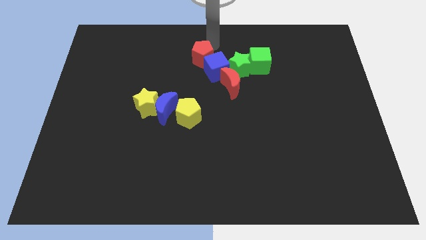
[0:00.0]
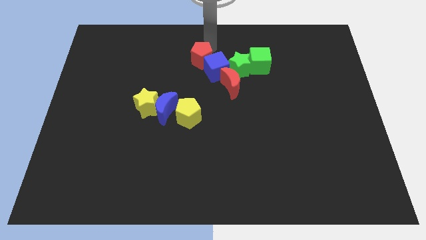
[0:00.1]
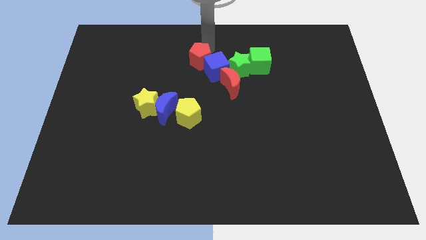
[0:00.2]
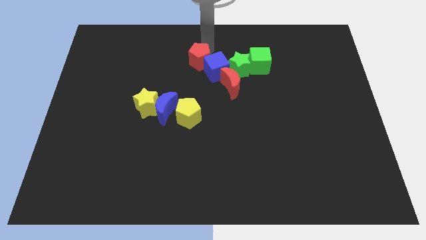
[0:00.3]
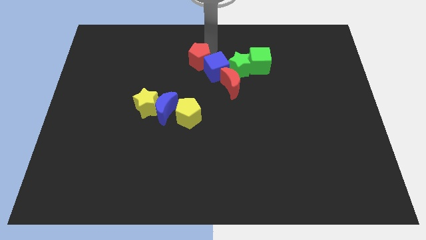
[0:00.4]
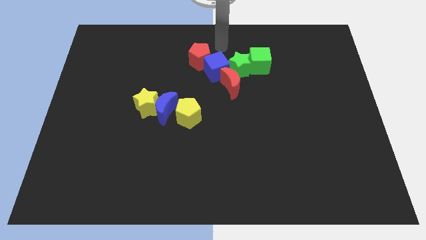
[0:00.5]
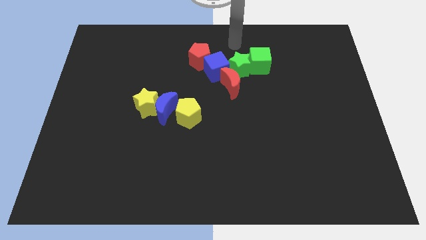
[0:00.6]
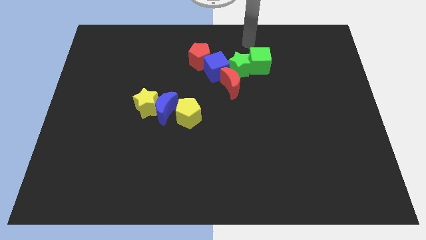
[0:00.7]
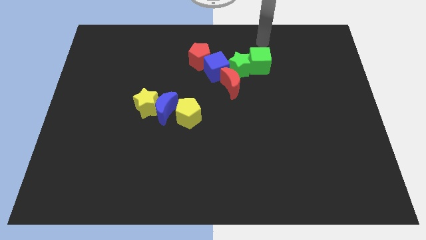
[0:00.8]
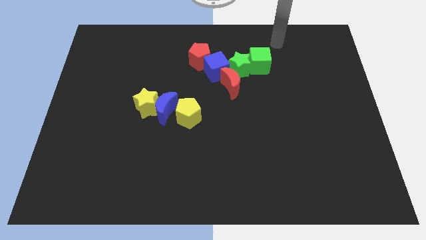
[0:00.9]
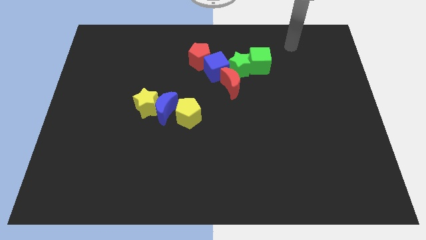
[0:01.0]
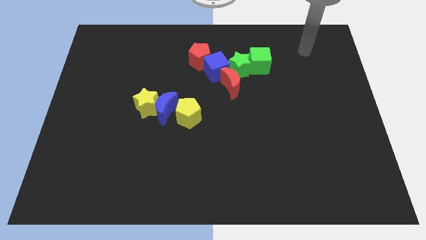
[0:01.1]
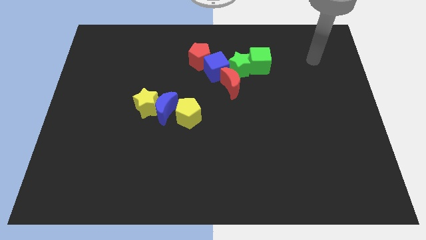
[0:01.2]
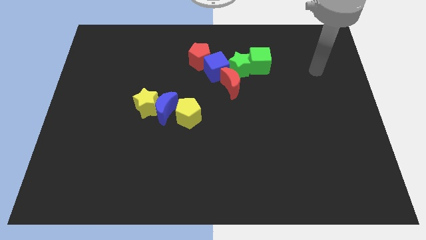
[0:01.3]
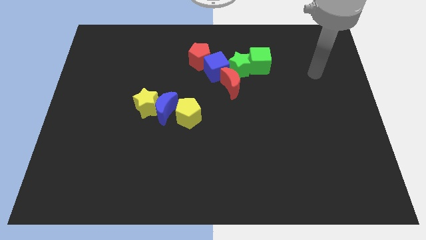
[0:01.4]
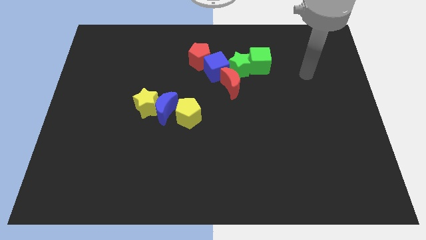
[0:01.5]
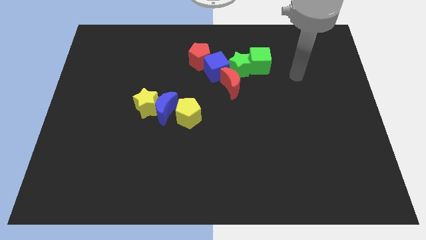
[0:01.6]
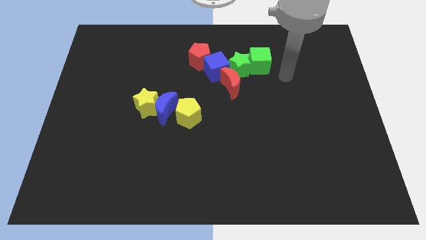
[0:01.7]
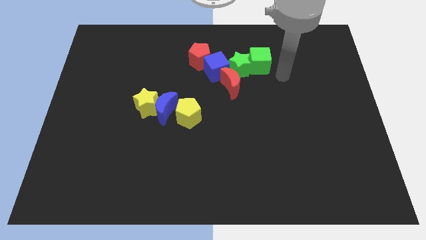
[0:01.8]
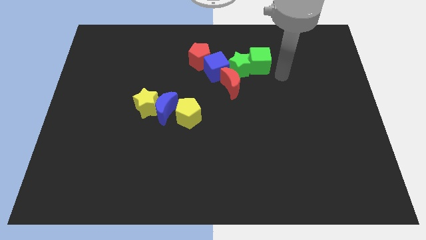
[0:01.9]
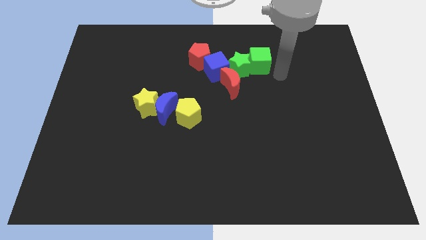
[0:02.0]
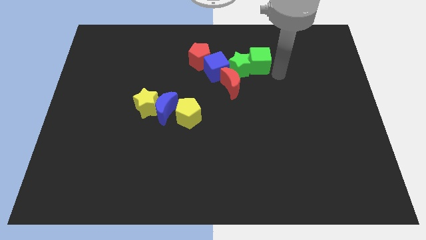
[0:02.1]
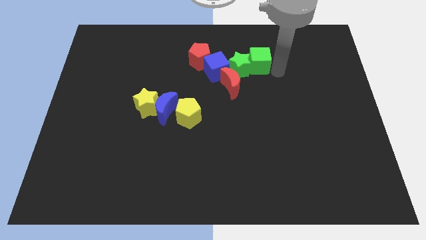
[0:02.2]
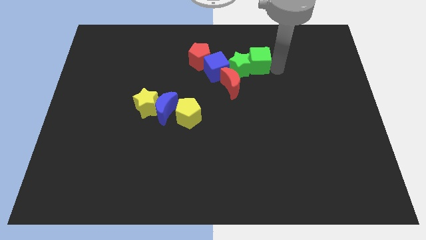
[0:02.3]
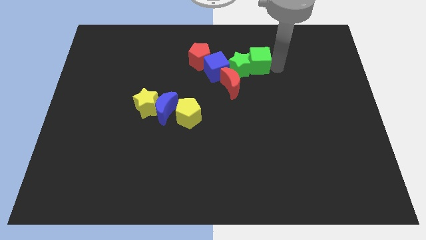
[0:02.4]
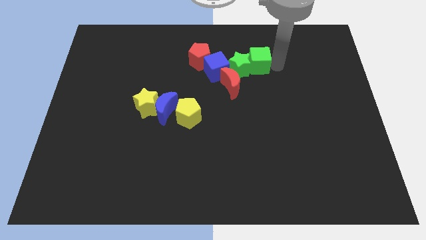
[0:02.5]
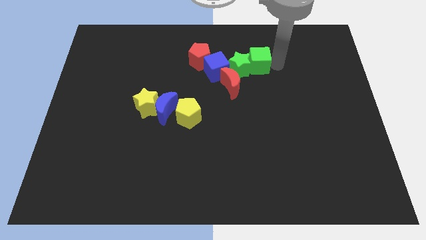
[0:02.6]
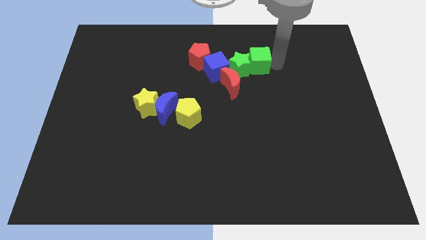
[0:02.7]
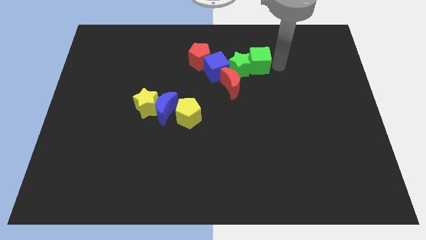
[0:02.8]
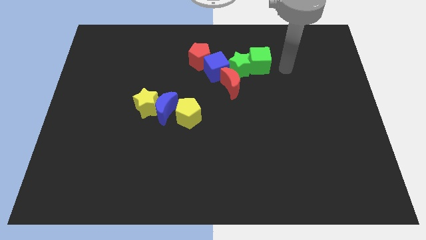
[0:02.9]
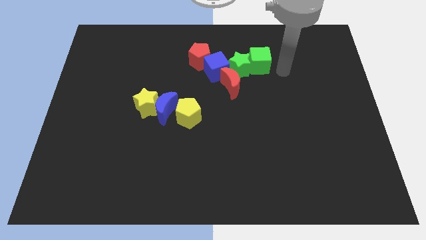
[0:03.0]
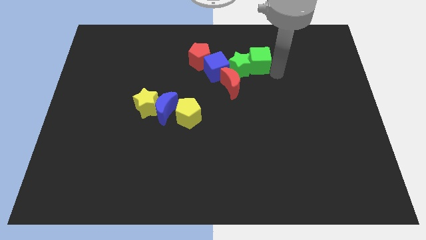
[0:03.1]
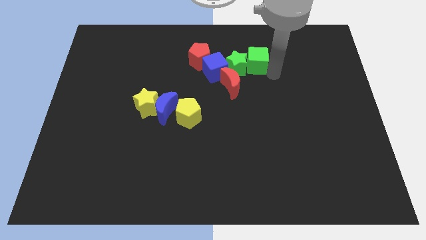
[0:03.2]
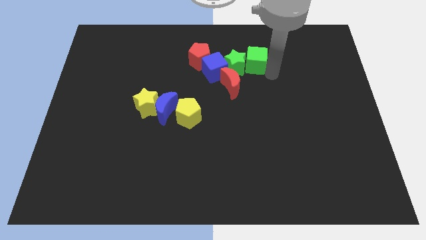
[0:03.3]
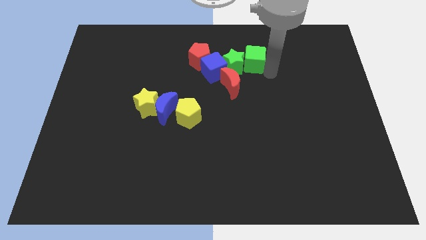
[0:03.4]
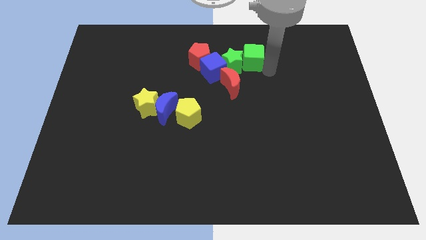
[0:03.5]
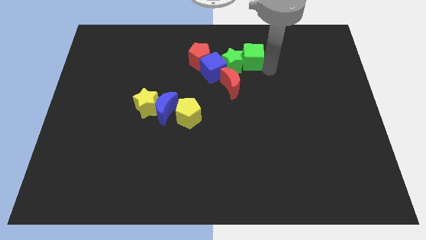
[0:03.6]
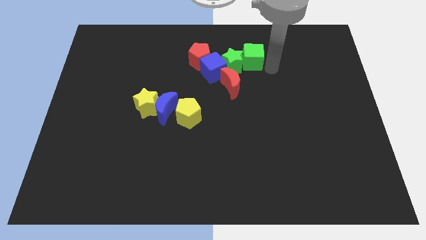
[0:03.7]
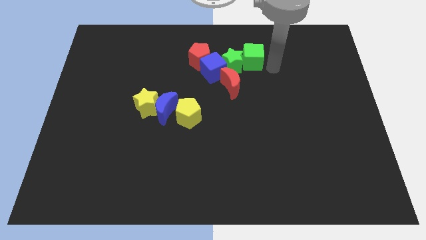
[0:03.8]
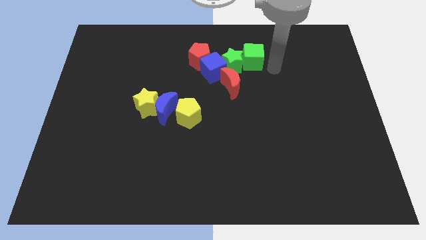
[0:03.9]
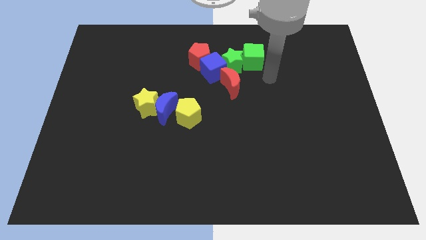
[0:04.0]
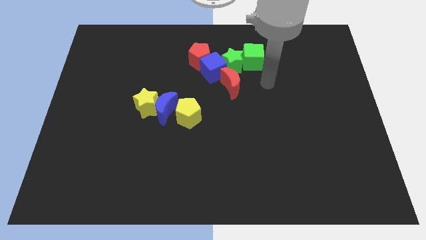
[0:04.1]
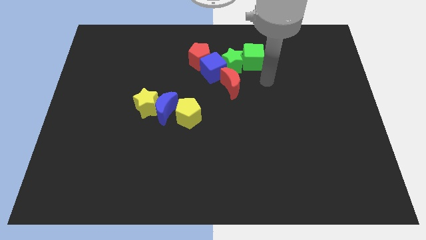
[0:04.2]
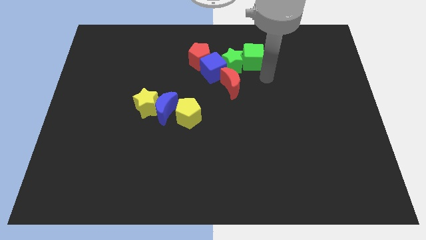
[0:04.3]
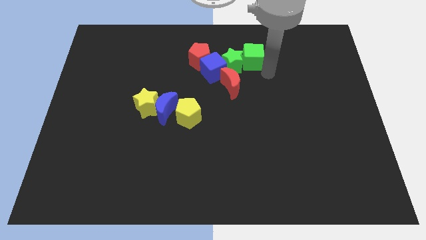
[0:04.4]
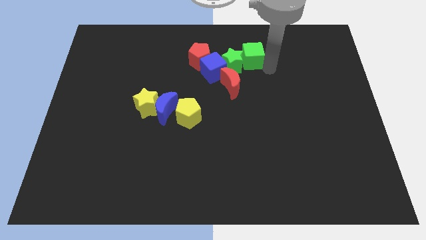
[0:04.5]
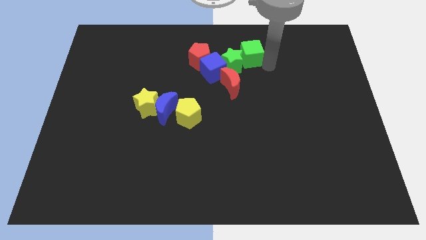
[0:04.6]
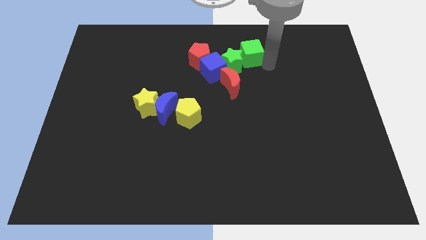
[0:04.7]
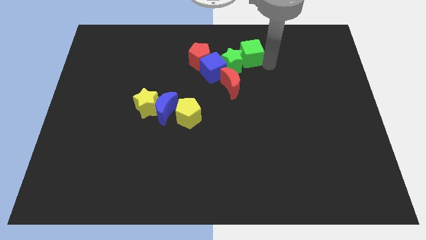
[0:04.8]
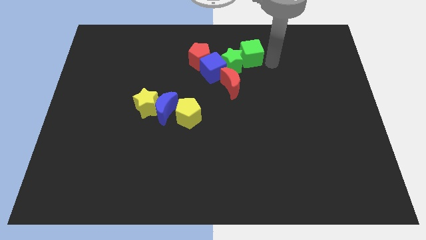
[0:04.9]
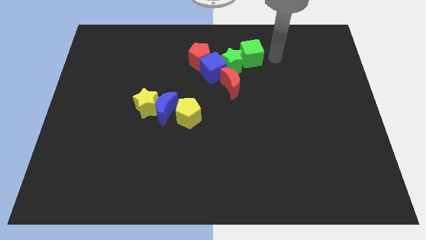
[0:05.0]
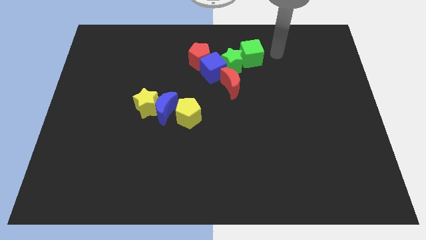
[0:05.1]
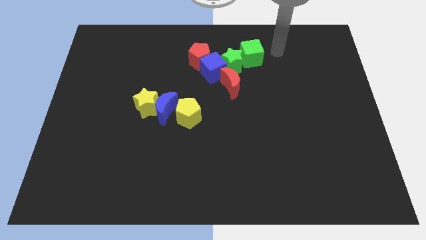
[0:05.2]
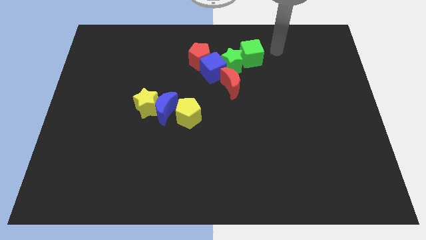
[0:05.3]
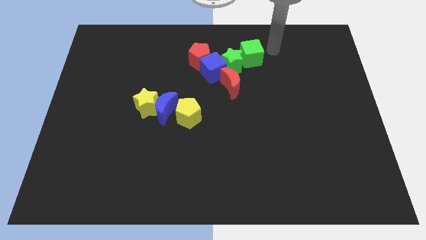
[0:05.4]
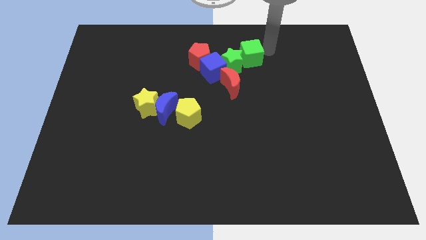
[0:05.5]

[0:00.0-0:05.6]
slightly move the green cube to the left

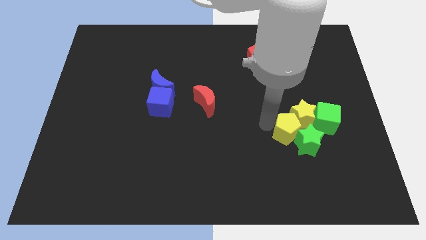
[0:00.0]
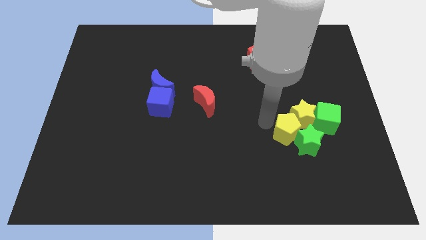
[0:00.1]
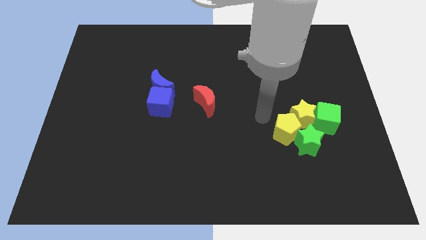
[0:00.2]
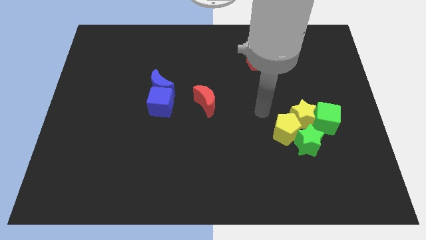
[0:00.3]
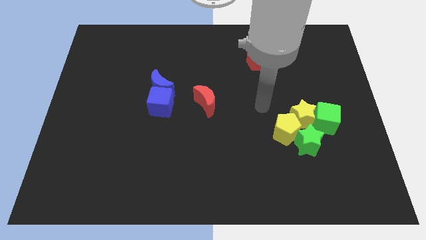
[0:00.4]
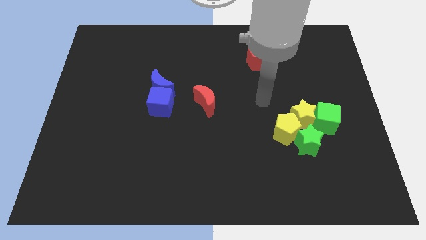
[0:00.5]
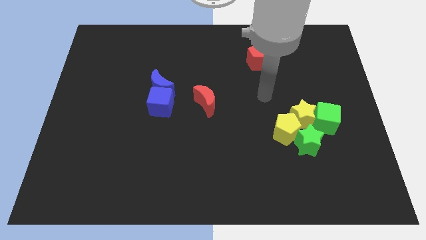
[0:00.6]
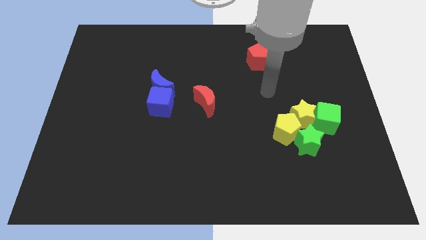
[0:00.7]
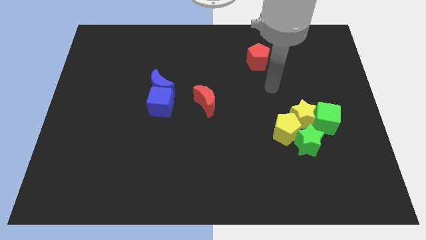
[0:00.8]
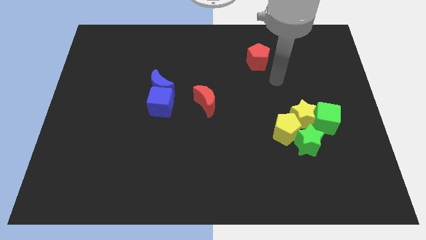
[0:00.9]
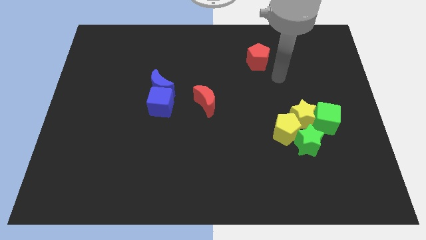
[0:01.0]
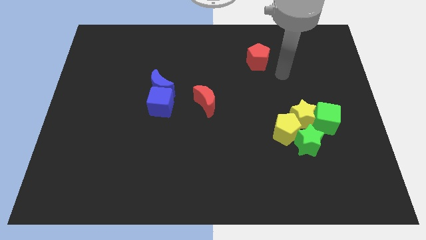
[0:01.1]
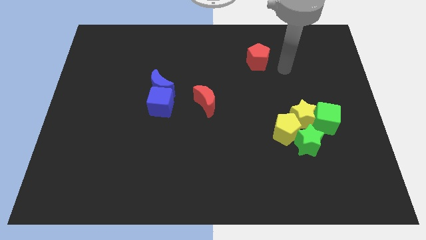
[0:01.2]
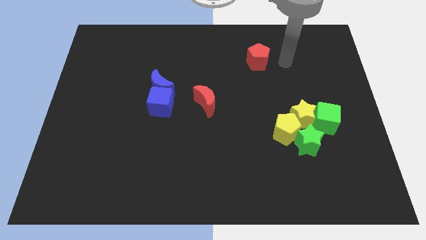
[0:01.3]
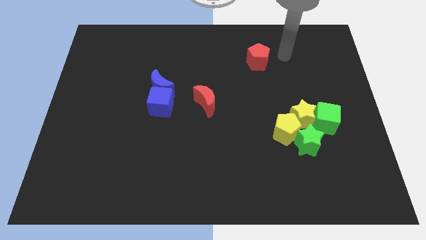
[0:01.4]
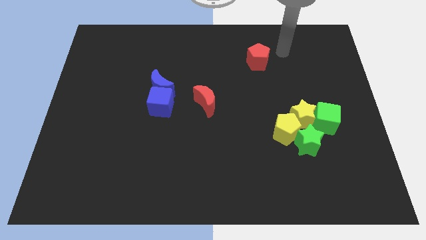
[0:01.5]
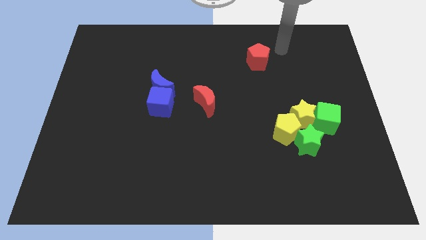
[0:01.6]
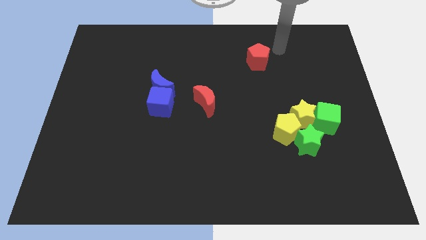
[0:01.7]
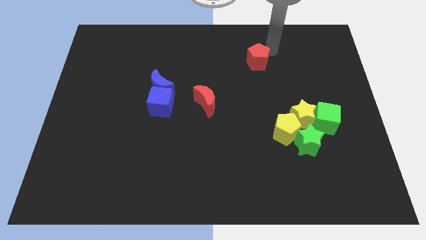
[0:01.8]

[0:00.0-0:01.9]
move your arm towards the red pentagon

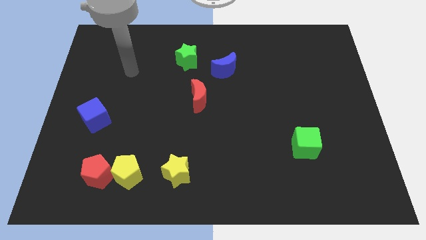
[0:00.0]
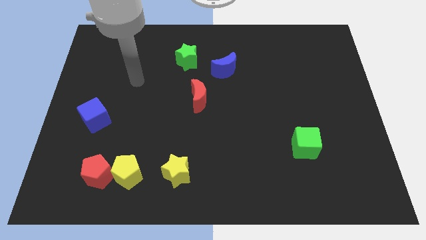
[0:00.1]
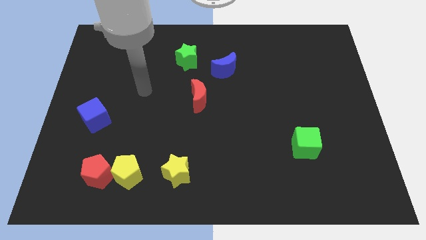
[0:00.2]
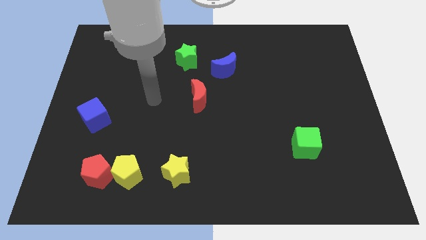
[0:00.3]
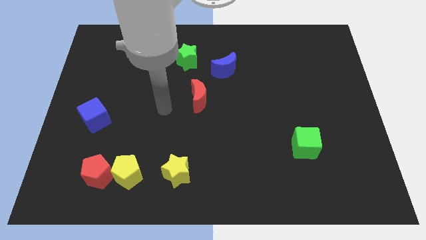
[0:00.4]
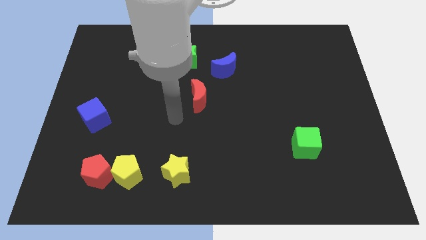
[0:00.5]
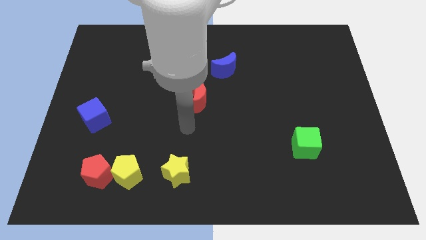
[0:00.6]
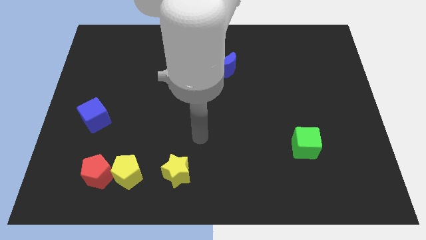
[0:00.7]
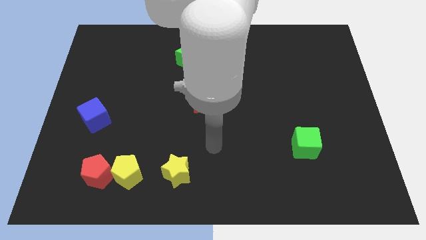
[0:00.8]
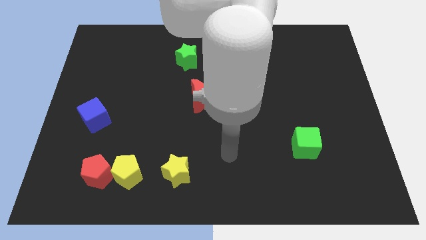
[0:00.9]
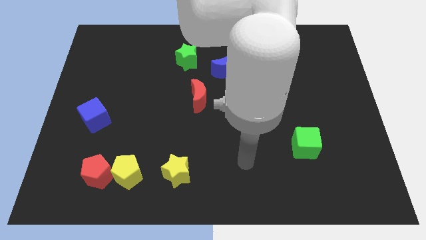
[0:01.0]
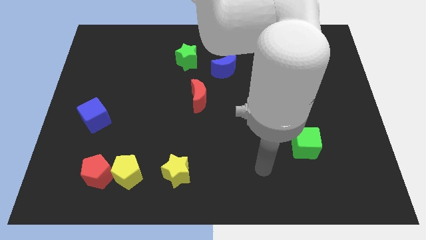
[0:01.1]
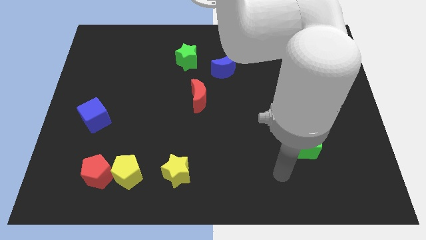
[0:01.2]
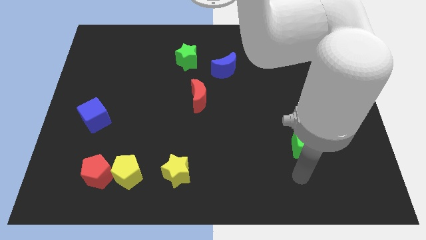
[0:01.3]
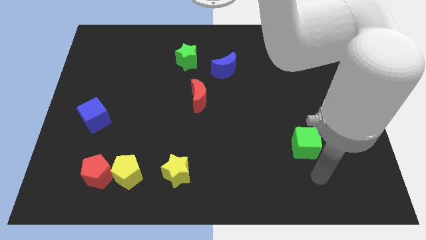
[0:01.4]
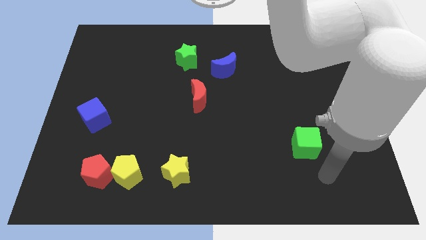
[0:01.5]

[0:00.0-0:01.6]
move the arm towards green cube

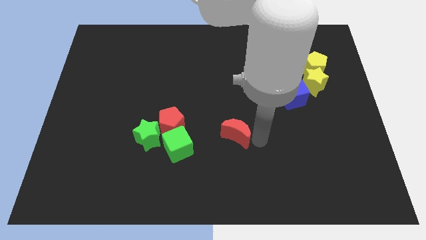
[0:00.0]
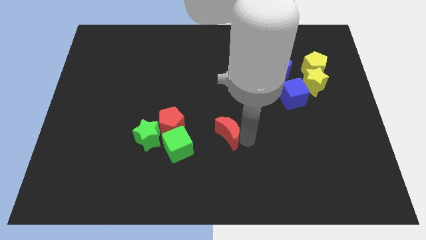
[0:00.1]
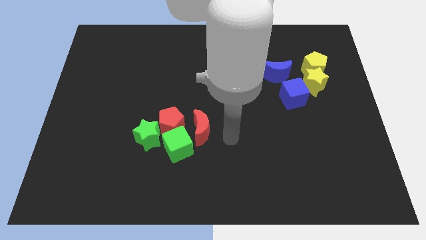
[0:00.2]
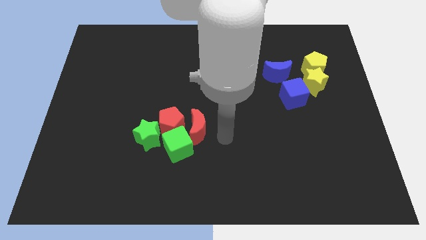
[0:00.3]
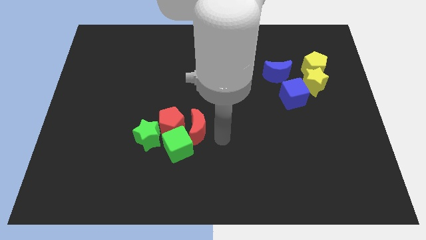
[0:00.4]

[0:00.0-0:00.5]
place the red moon right to the red pentagon
